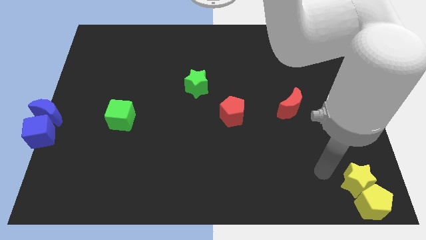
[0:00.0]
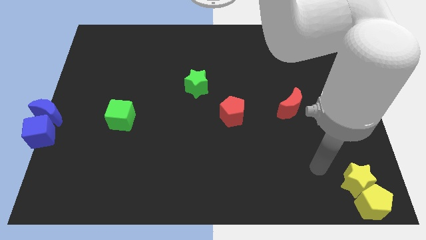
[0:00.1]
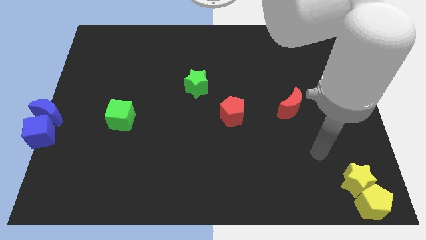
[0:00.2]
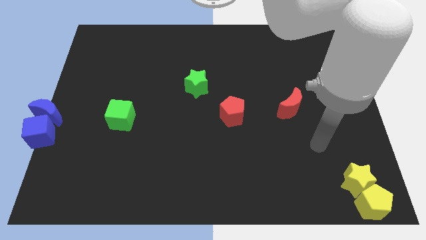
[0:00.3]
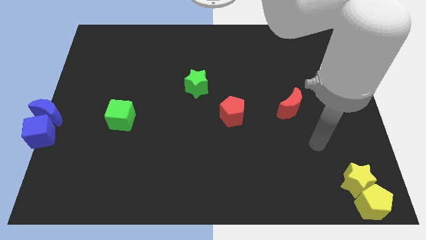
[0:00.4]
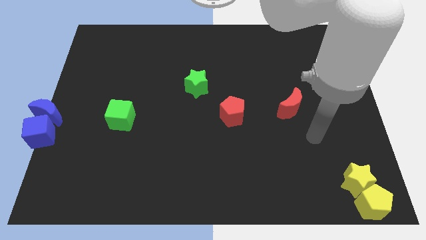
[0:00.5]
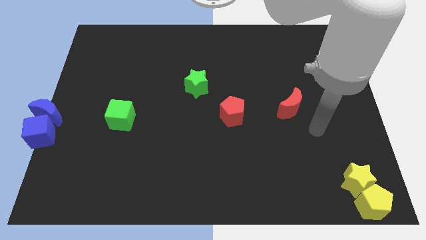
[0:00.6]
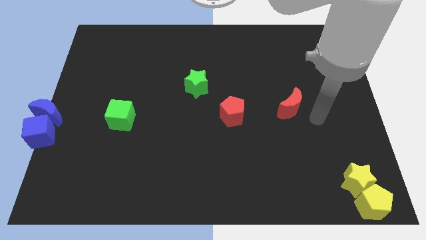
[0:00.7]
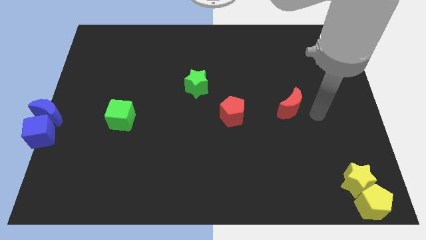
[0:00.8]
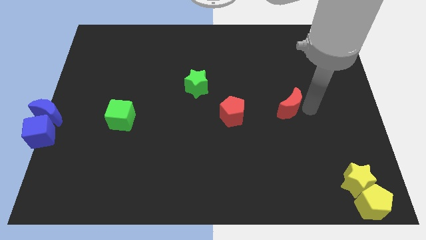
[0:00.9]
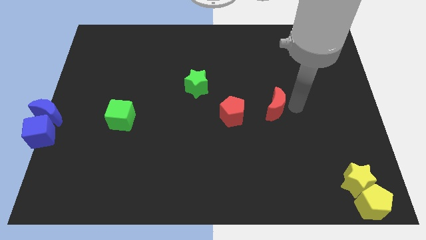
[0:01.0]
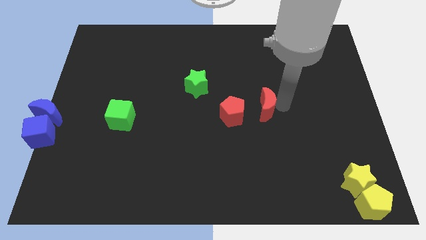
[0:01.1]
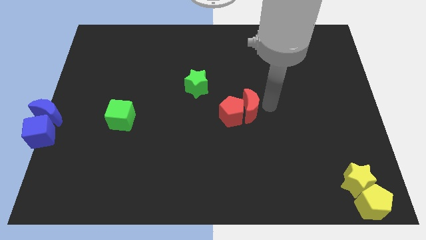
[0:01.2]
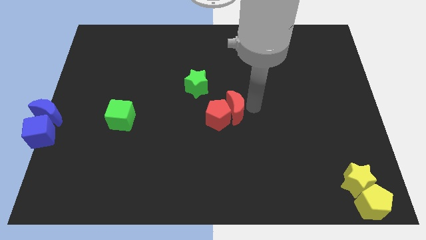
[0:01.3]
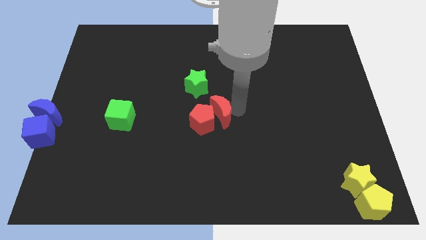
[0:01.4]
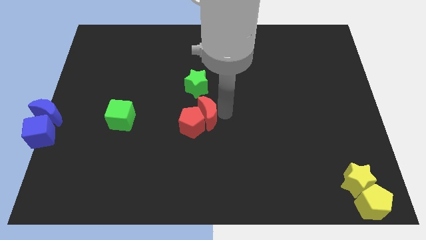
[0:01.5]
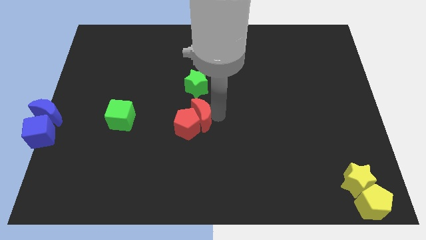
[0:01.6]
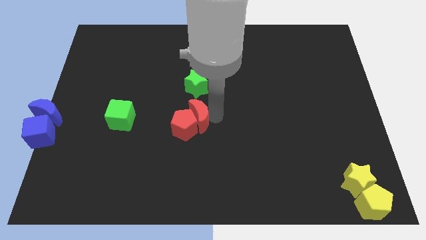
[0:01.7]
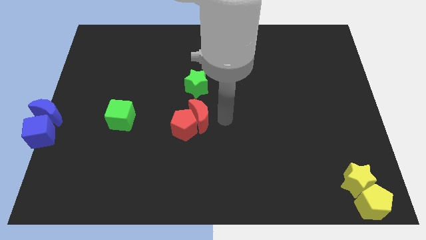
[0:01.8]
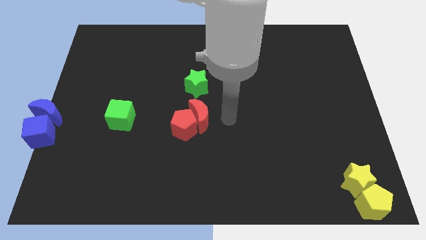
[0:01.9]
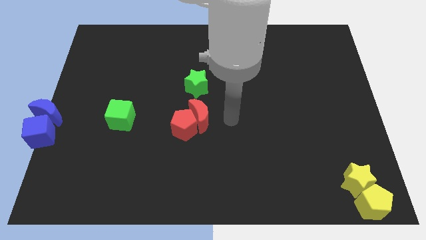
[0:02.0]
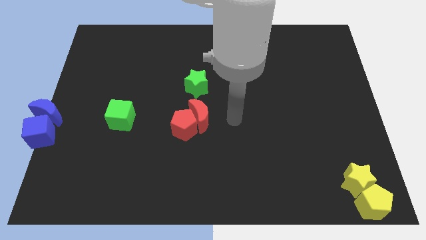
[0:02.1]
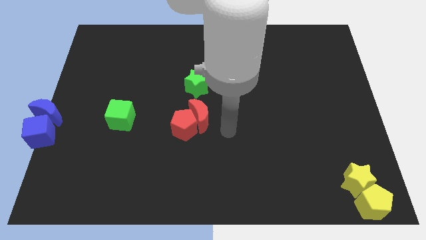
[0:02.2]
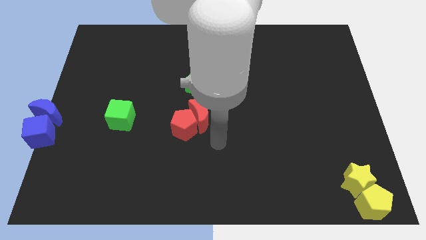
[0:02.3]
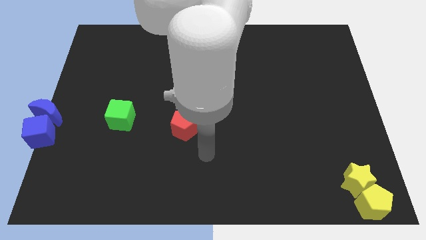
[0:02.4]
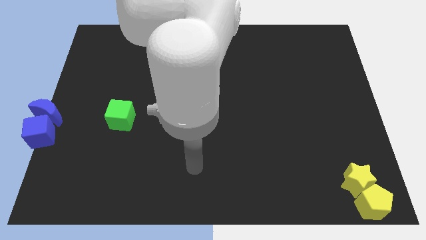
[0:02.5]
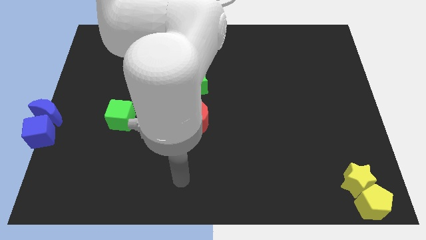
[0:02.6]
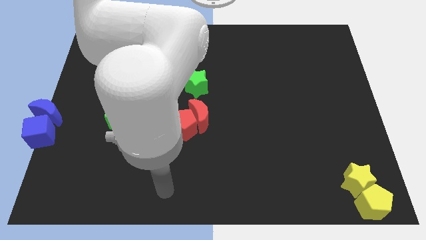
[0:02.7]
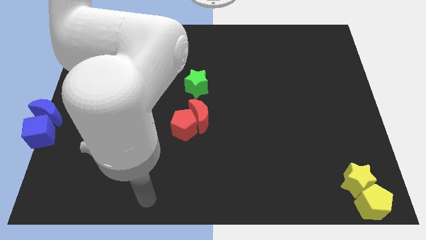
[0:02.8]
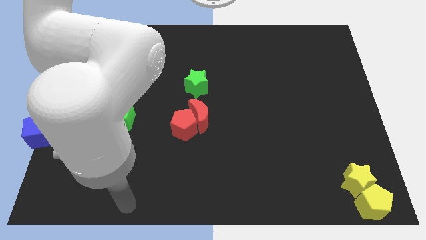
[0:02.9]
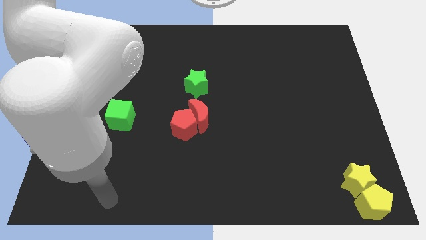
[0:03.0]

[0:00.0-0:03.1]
move the red blocks vertically below the green star

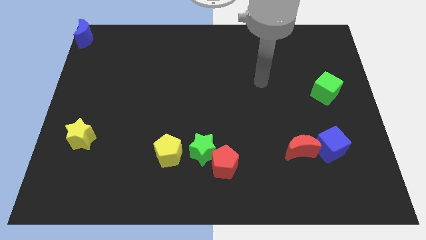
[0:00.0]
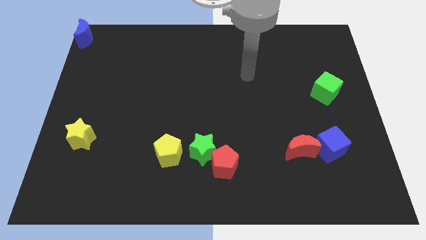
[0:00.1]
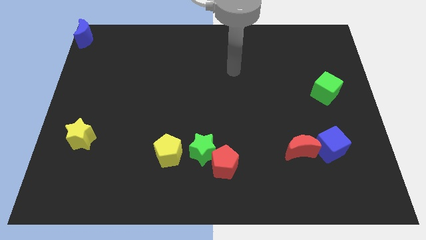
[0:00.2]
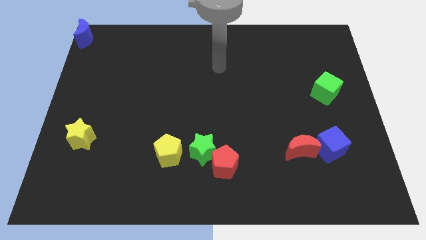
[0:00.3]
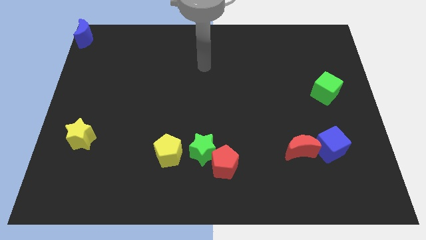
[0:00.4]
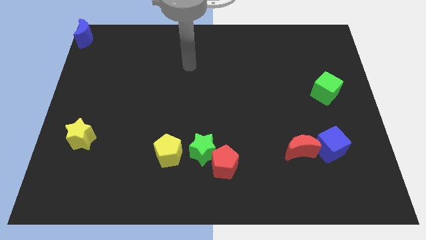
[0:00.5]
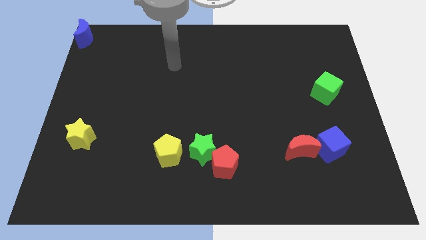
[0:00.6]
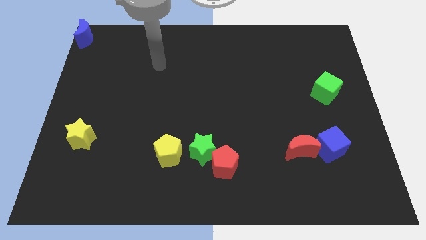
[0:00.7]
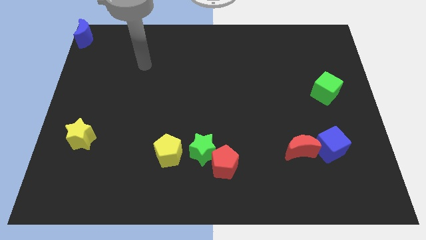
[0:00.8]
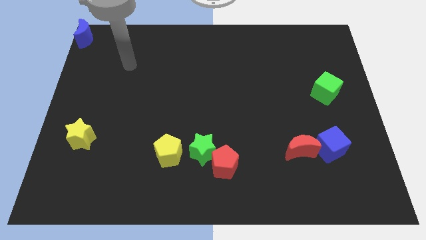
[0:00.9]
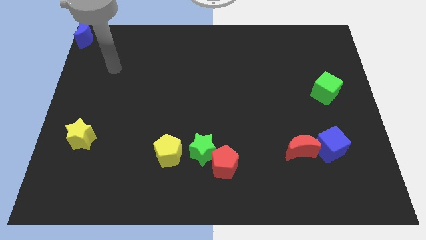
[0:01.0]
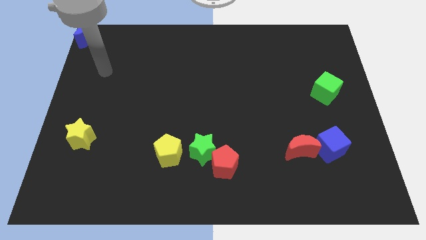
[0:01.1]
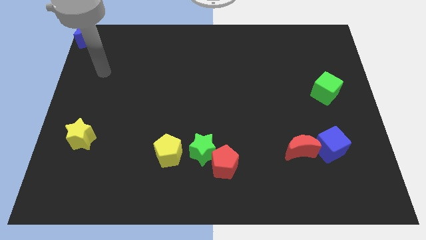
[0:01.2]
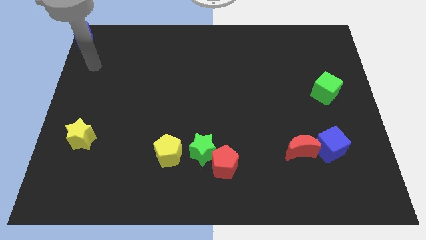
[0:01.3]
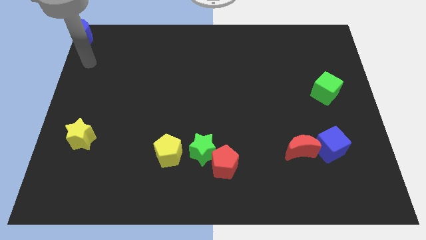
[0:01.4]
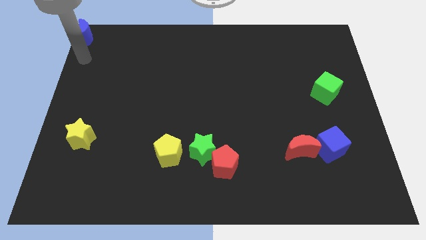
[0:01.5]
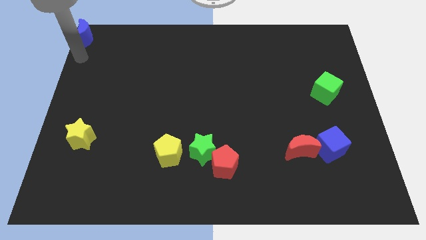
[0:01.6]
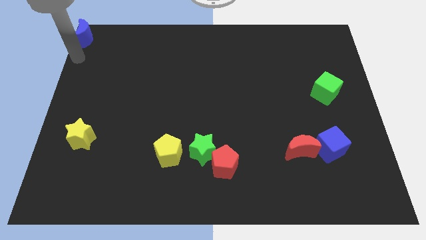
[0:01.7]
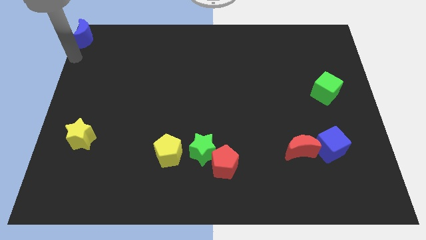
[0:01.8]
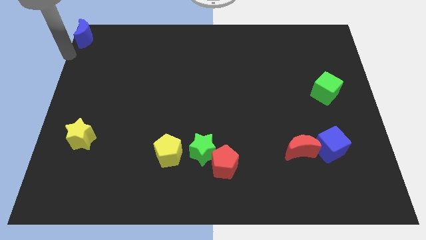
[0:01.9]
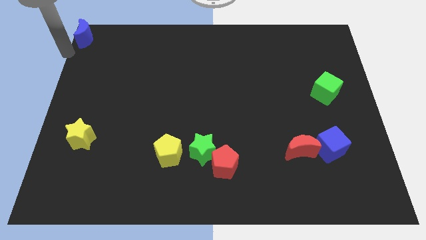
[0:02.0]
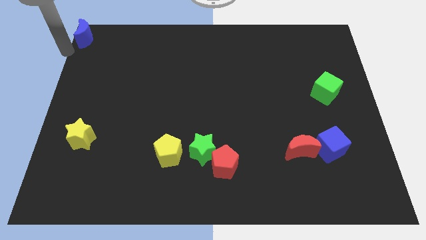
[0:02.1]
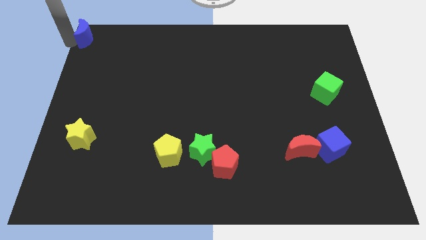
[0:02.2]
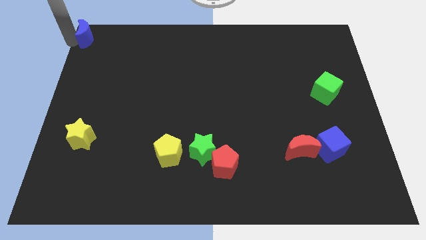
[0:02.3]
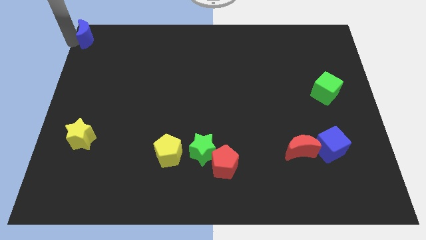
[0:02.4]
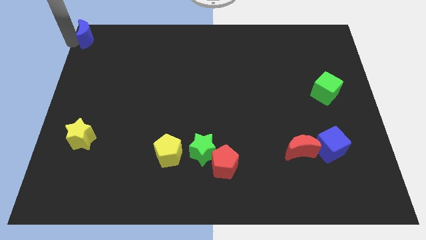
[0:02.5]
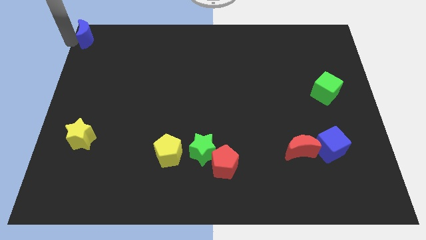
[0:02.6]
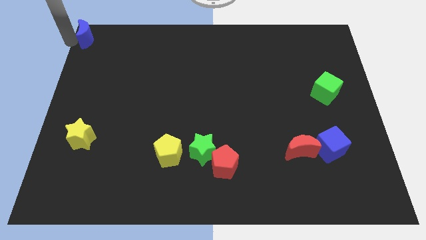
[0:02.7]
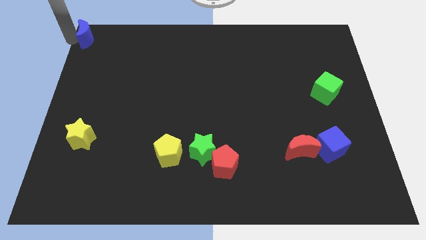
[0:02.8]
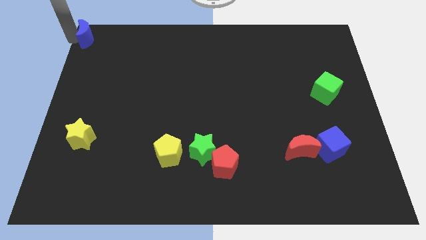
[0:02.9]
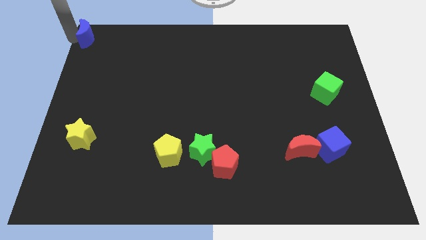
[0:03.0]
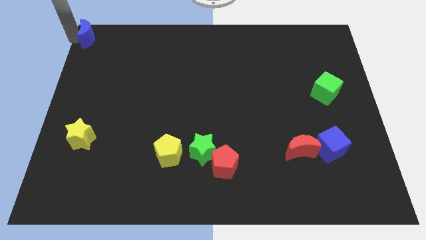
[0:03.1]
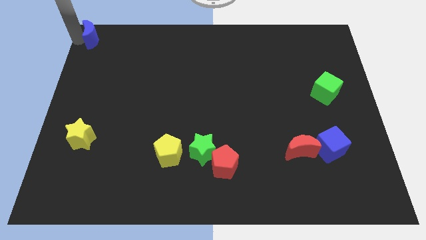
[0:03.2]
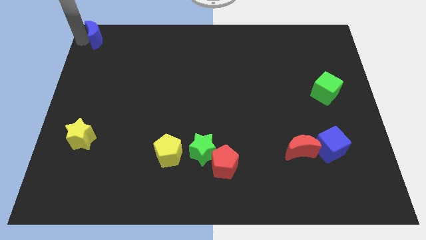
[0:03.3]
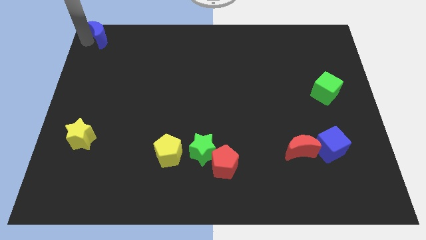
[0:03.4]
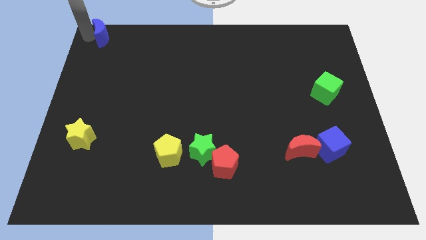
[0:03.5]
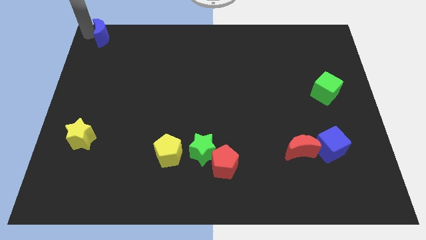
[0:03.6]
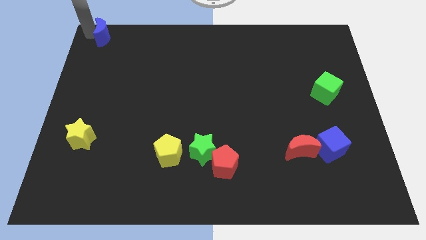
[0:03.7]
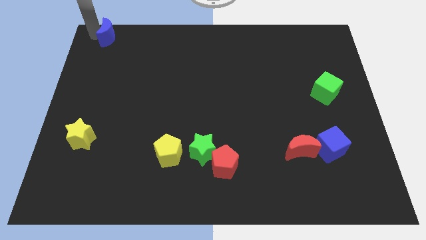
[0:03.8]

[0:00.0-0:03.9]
move your arm towards the blue moon

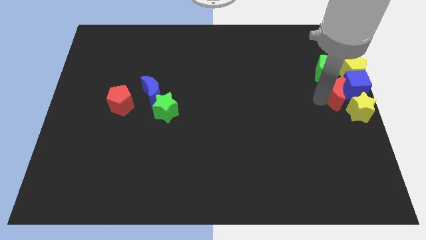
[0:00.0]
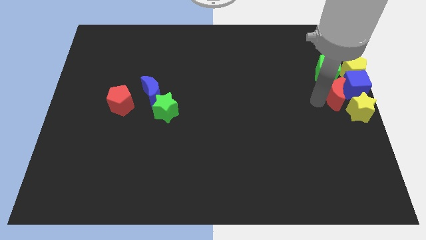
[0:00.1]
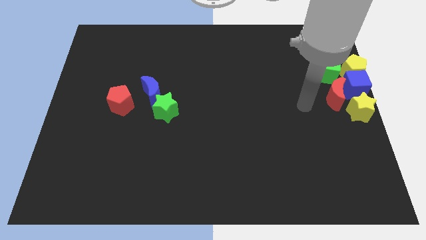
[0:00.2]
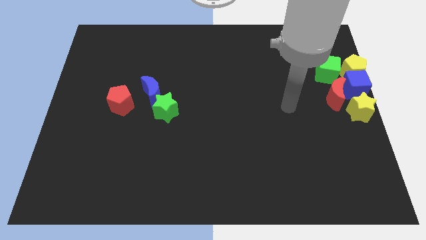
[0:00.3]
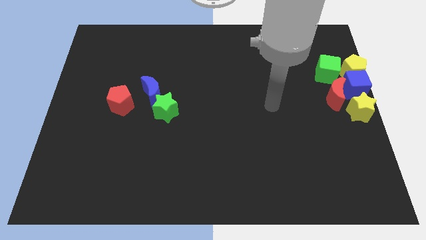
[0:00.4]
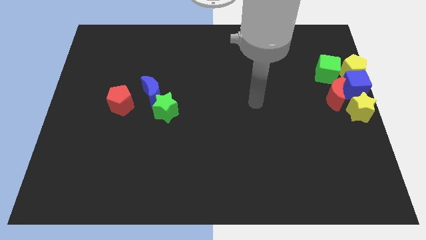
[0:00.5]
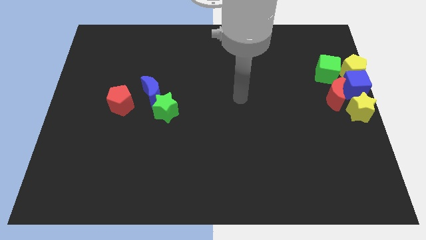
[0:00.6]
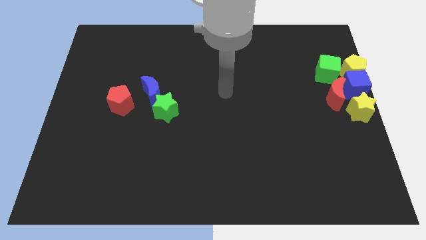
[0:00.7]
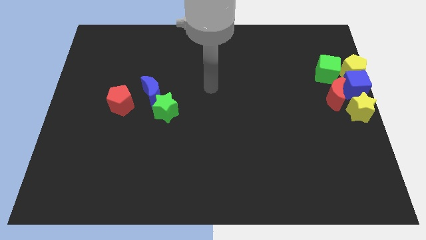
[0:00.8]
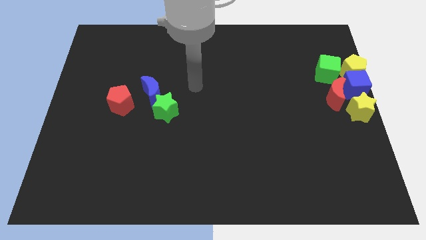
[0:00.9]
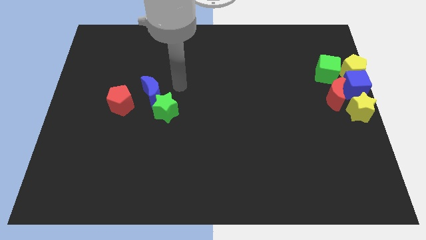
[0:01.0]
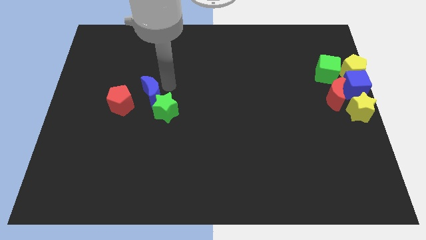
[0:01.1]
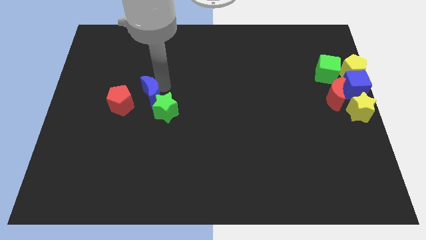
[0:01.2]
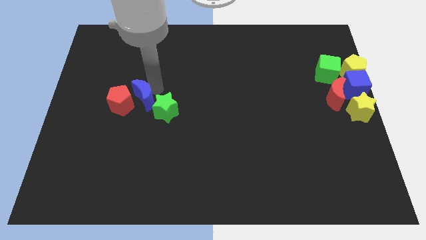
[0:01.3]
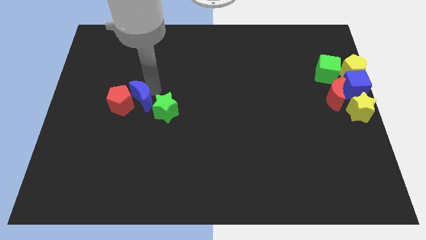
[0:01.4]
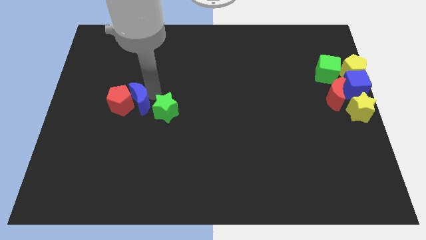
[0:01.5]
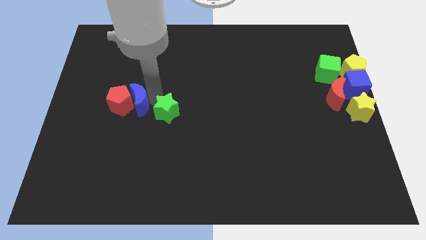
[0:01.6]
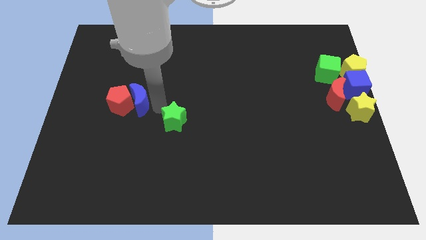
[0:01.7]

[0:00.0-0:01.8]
move your arm towards the green star
